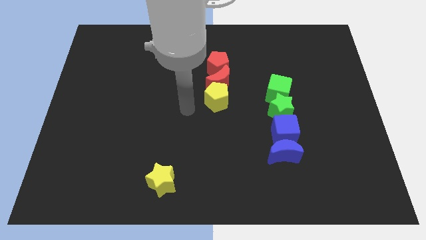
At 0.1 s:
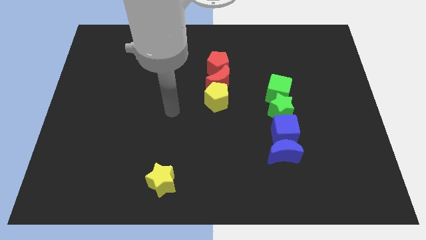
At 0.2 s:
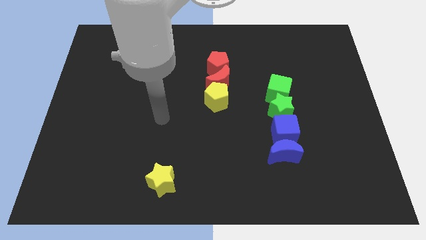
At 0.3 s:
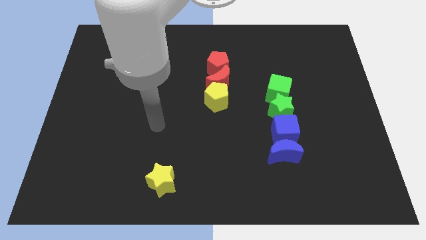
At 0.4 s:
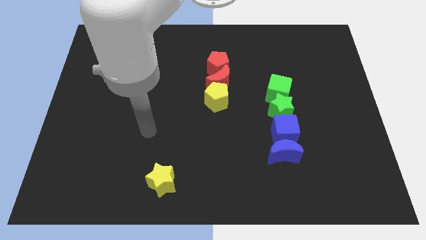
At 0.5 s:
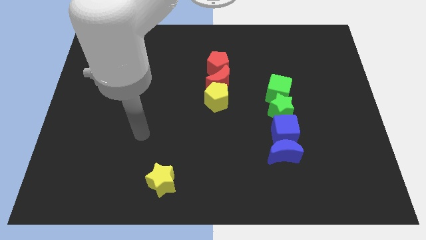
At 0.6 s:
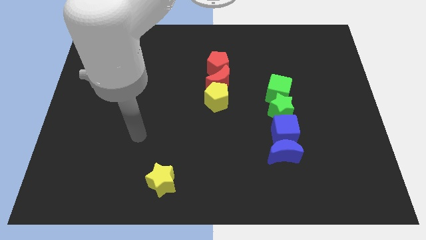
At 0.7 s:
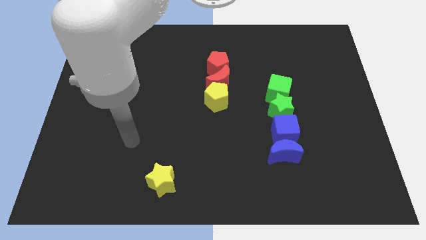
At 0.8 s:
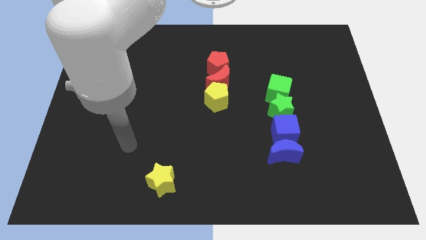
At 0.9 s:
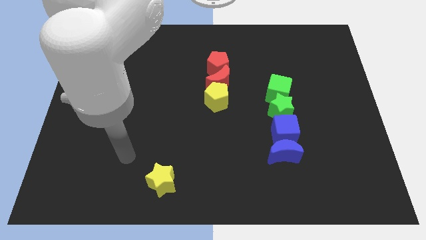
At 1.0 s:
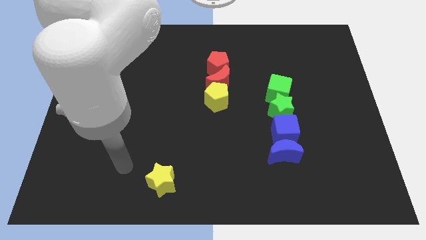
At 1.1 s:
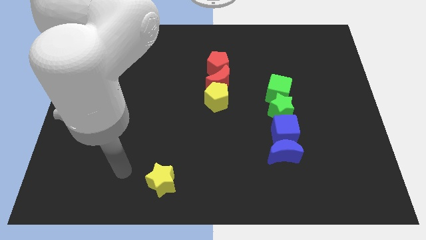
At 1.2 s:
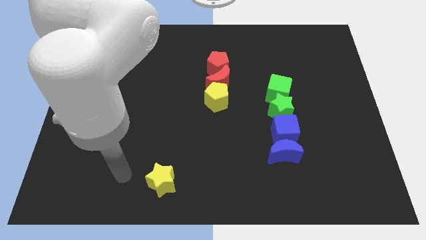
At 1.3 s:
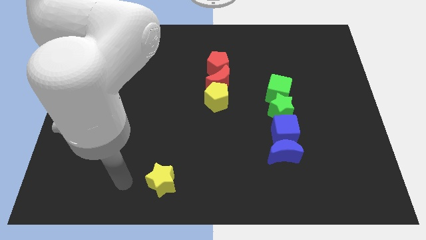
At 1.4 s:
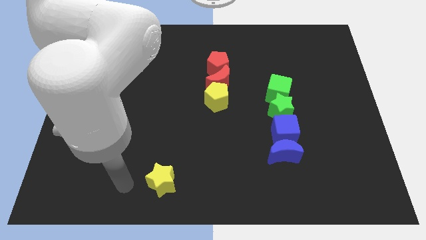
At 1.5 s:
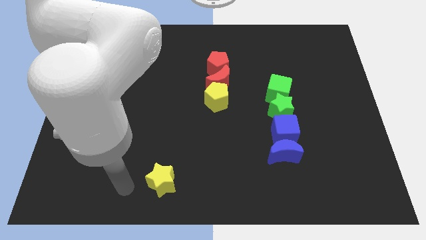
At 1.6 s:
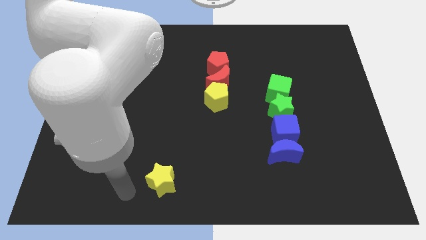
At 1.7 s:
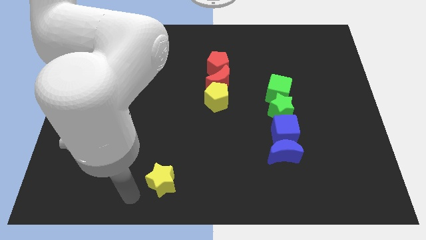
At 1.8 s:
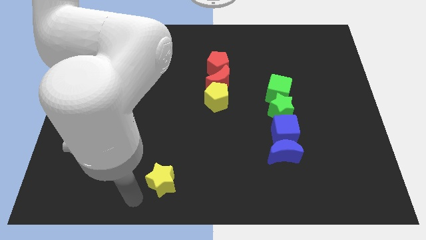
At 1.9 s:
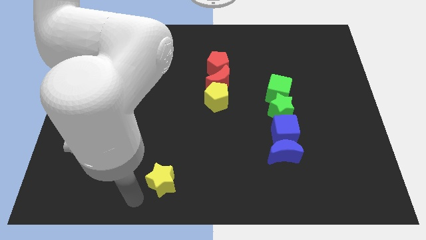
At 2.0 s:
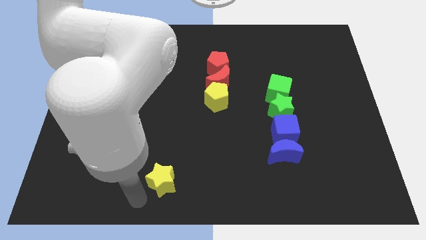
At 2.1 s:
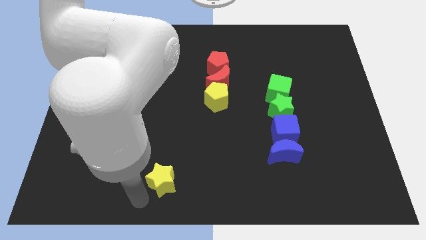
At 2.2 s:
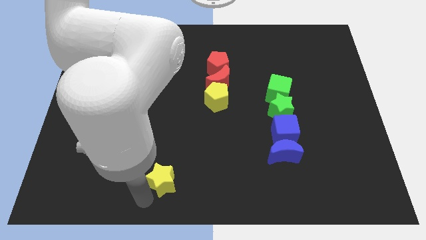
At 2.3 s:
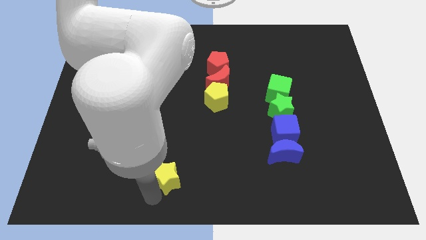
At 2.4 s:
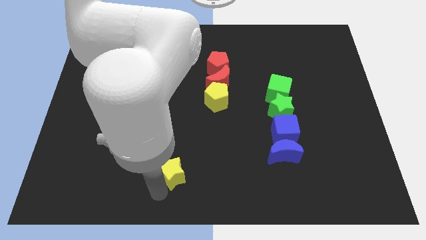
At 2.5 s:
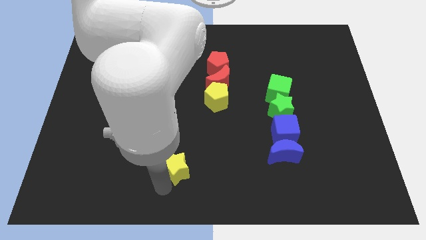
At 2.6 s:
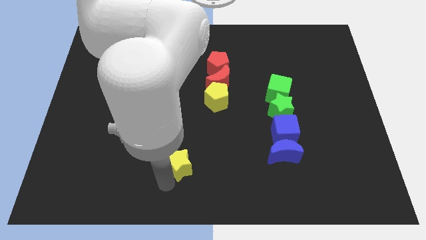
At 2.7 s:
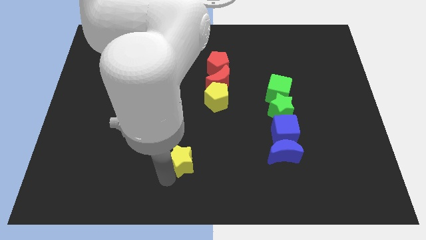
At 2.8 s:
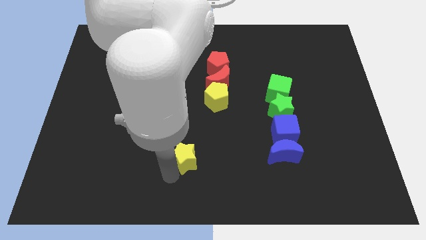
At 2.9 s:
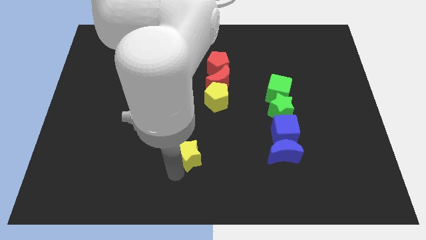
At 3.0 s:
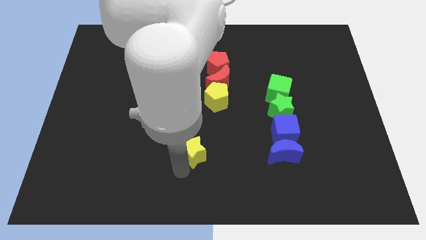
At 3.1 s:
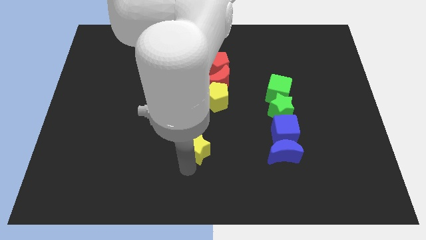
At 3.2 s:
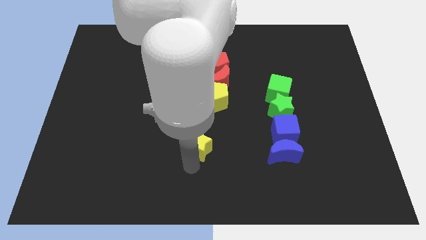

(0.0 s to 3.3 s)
slide the yellow star towards the bottom side of the yellow pentagon

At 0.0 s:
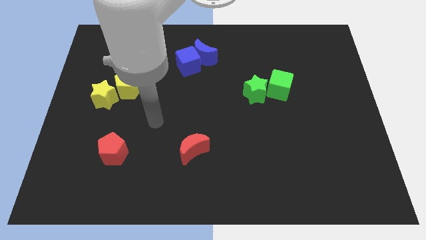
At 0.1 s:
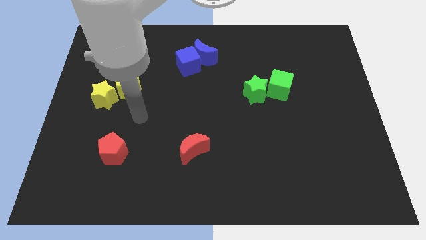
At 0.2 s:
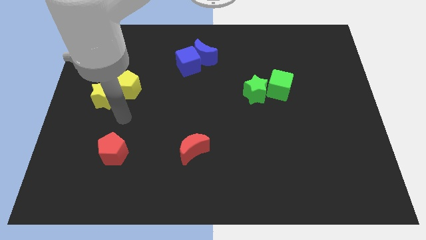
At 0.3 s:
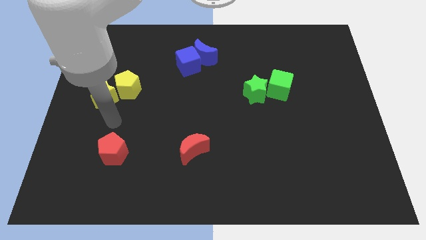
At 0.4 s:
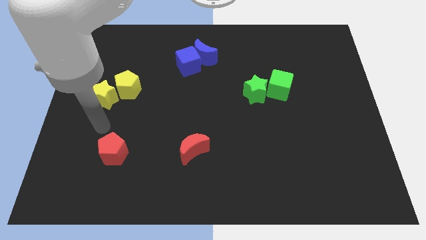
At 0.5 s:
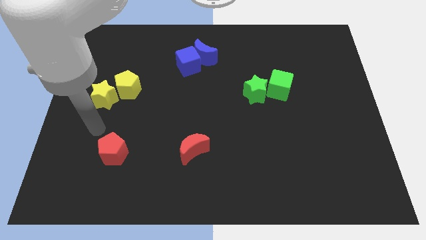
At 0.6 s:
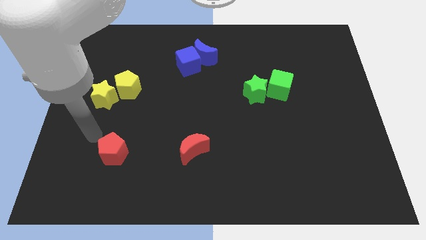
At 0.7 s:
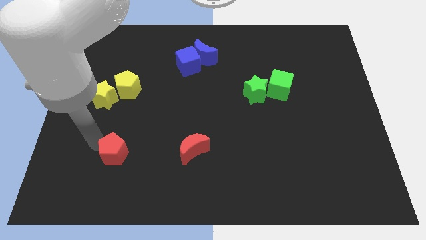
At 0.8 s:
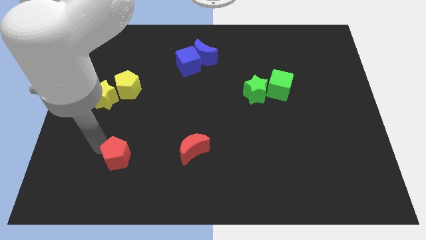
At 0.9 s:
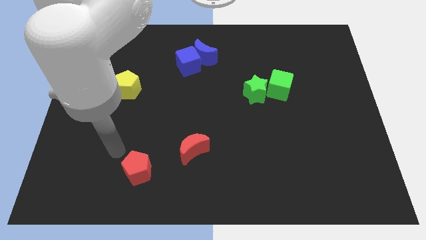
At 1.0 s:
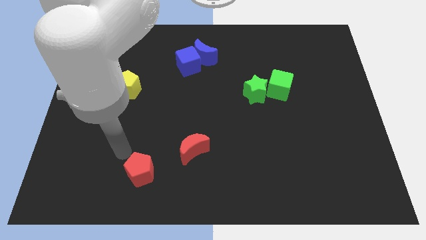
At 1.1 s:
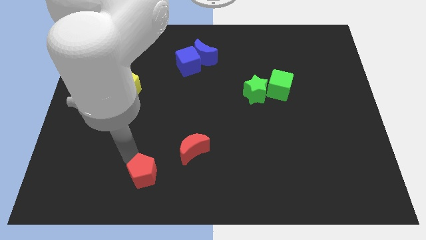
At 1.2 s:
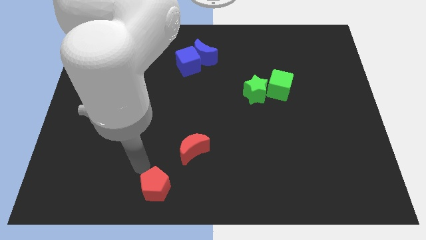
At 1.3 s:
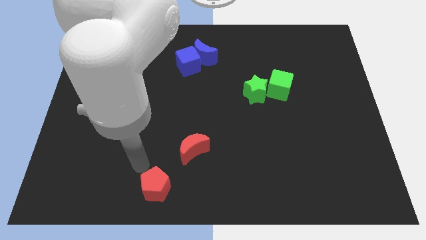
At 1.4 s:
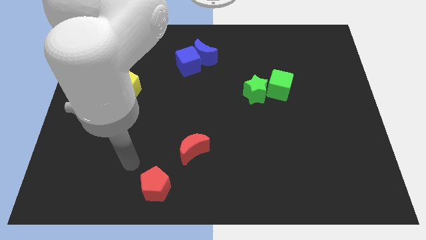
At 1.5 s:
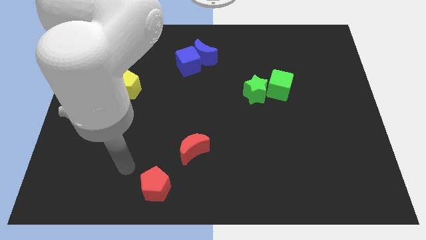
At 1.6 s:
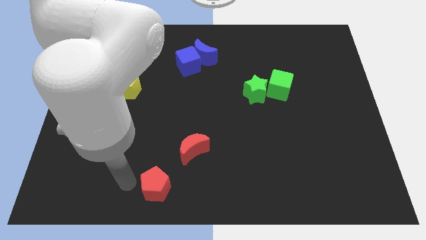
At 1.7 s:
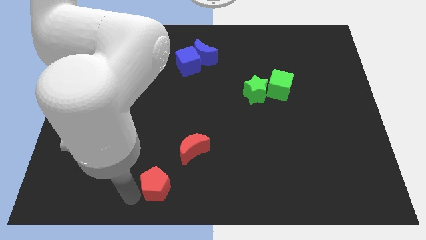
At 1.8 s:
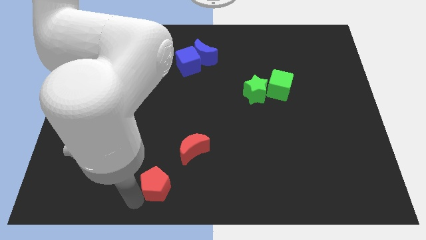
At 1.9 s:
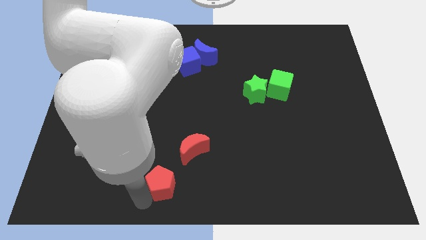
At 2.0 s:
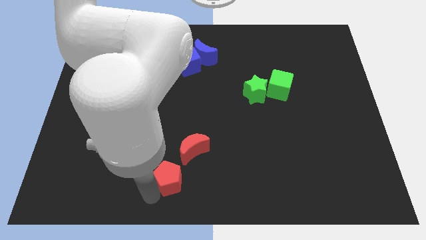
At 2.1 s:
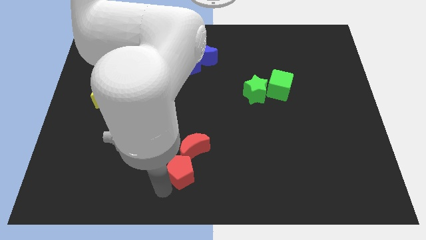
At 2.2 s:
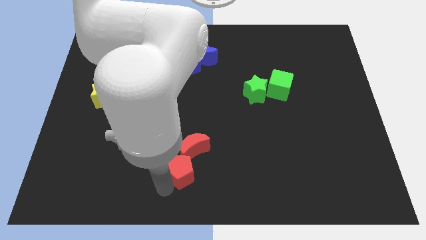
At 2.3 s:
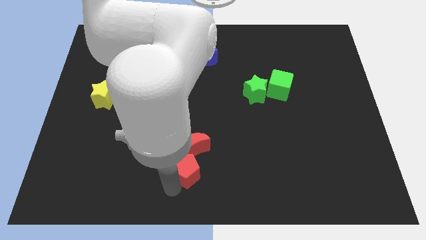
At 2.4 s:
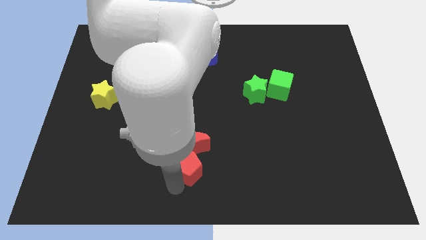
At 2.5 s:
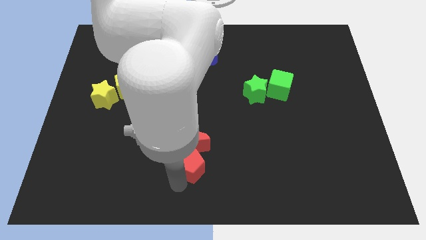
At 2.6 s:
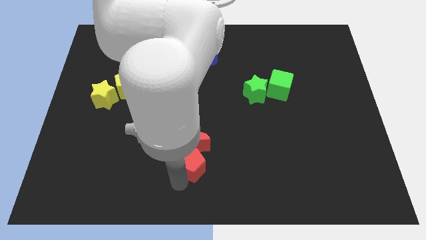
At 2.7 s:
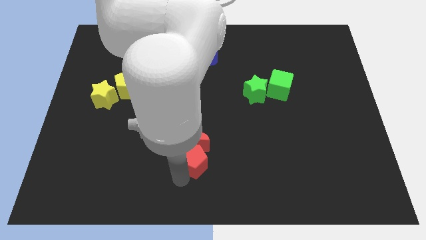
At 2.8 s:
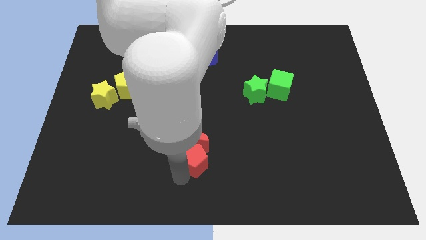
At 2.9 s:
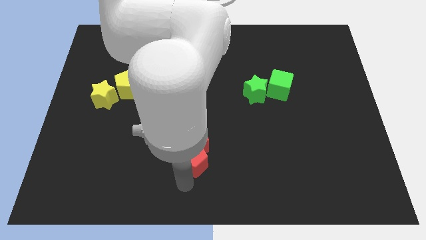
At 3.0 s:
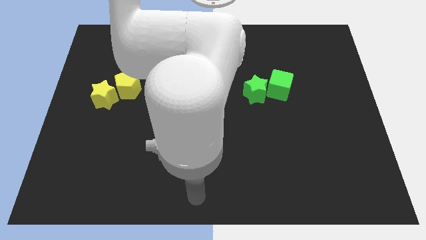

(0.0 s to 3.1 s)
move the red pentagon into red crescent

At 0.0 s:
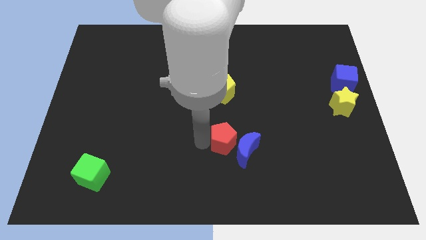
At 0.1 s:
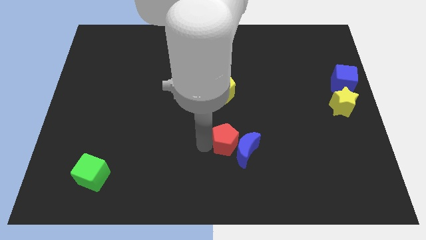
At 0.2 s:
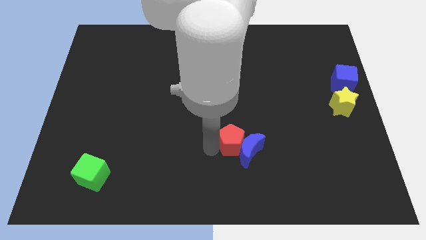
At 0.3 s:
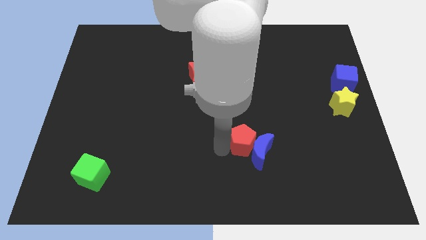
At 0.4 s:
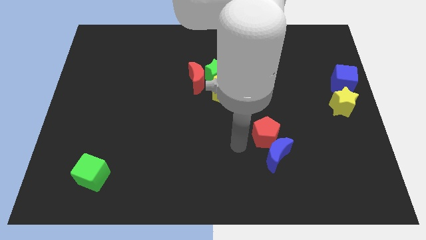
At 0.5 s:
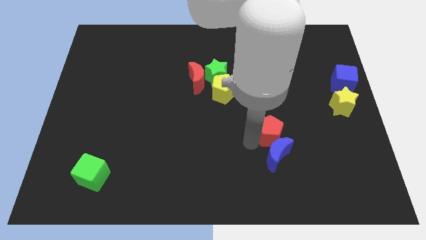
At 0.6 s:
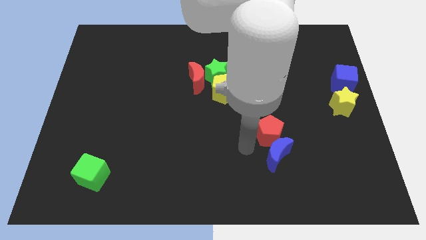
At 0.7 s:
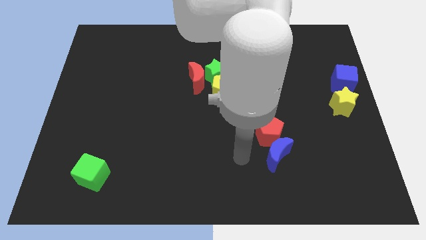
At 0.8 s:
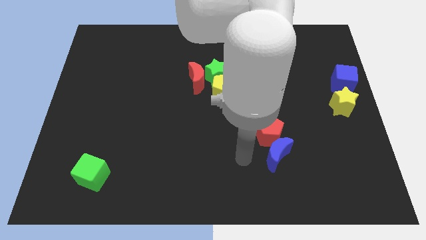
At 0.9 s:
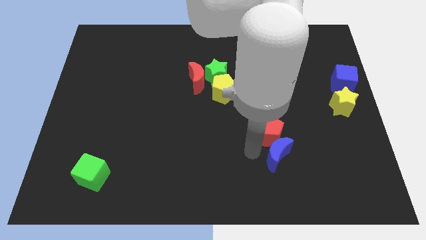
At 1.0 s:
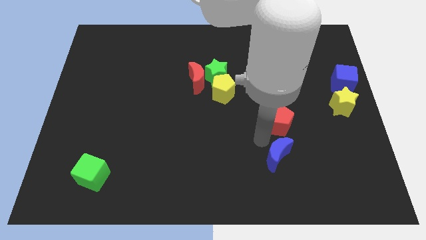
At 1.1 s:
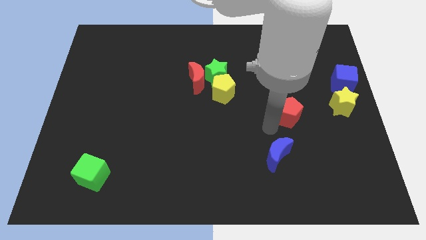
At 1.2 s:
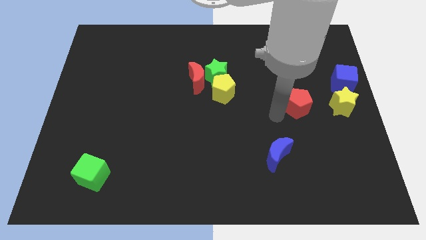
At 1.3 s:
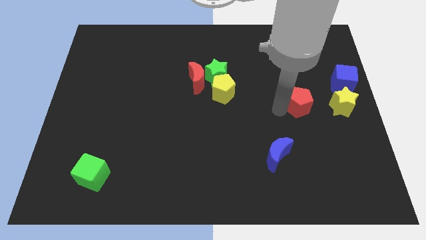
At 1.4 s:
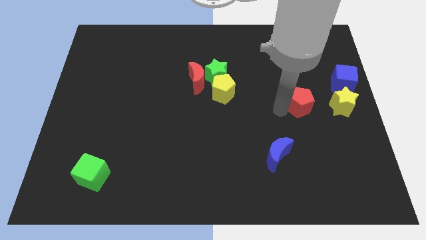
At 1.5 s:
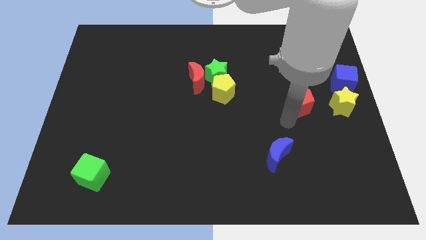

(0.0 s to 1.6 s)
move the red pentagon to the left side of the yellow star

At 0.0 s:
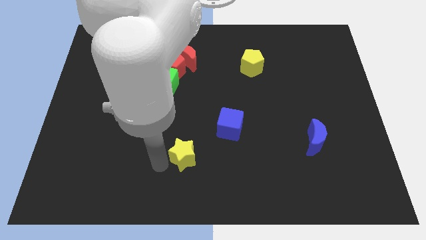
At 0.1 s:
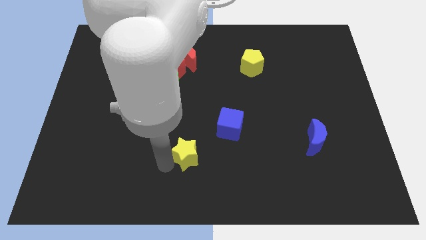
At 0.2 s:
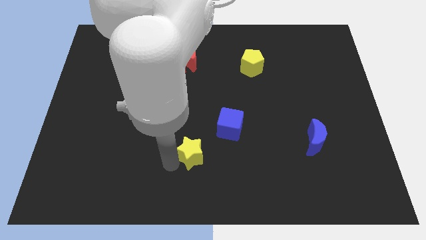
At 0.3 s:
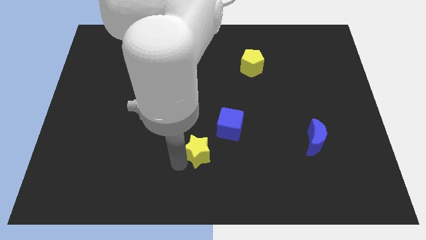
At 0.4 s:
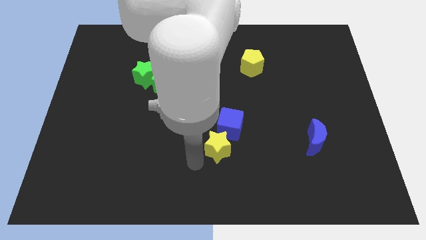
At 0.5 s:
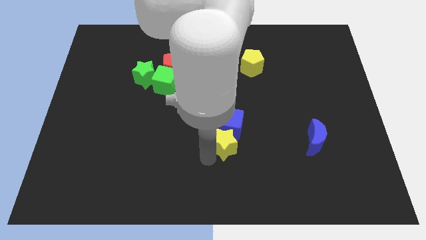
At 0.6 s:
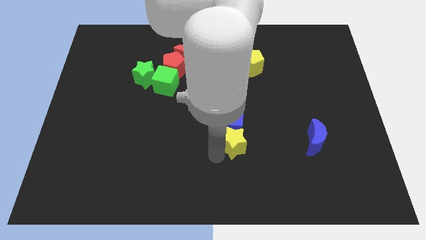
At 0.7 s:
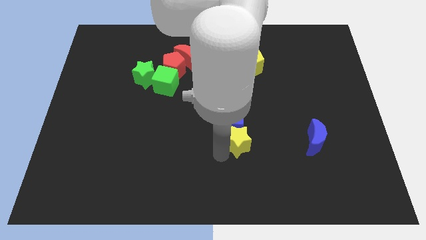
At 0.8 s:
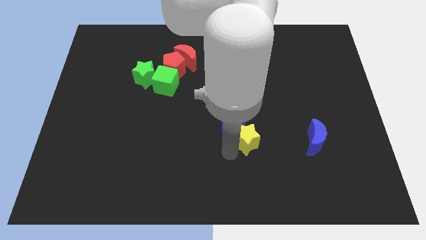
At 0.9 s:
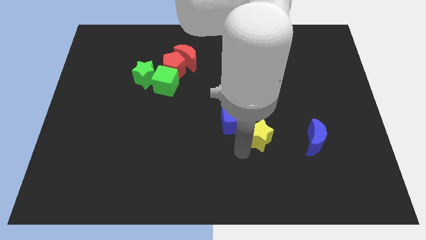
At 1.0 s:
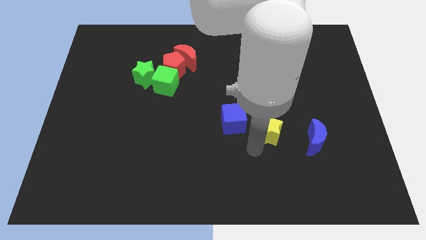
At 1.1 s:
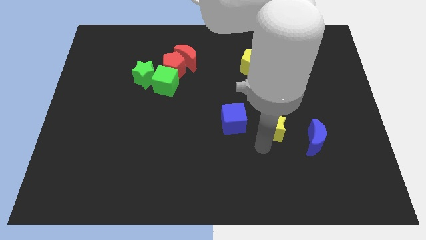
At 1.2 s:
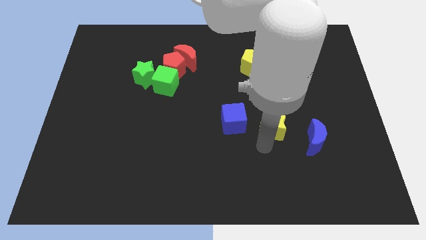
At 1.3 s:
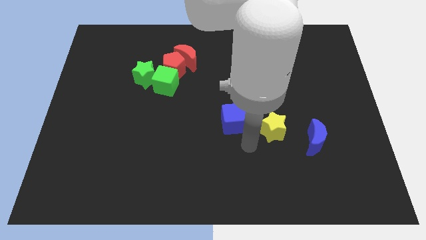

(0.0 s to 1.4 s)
put the yellow star between the blue cube and blue moon
